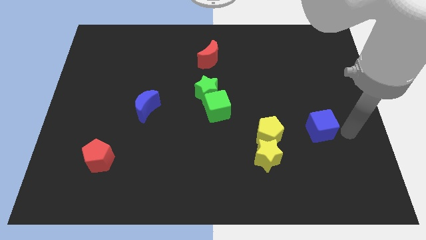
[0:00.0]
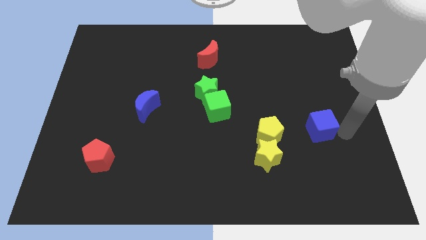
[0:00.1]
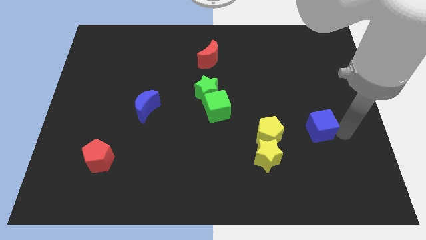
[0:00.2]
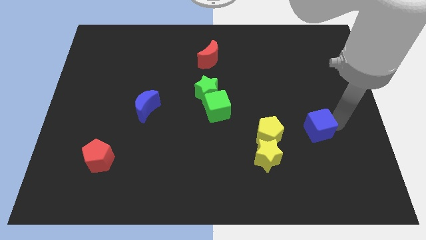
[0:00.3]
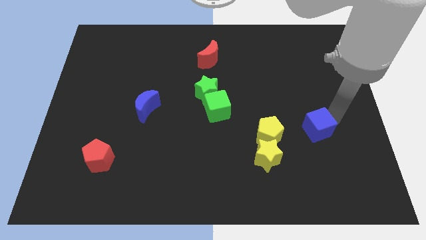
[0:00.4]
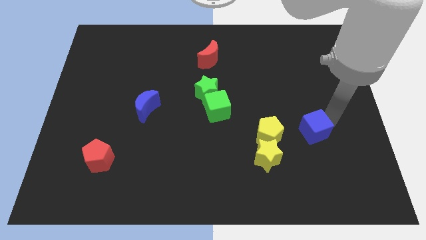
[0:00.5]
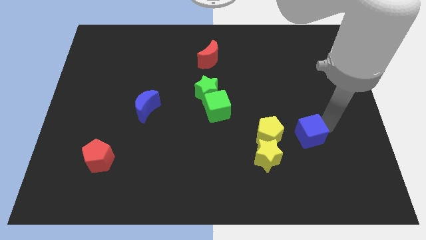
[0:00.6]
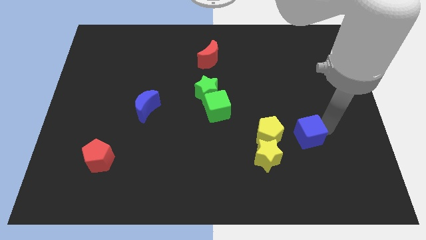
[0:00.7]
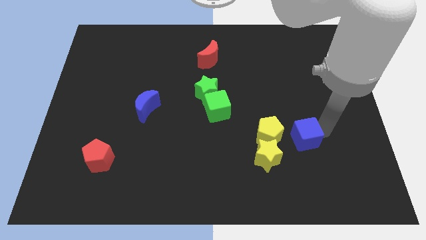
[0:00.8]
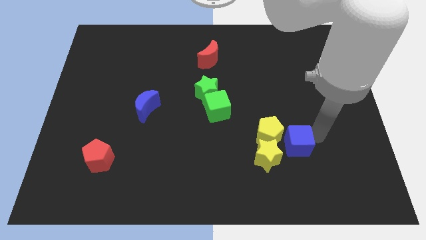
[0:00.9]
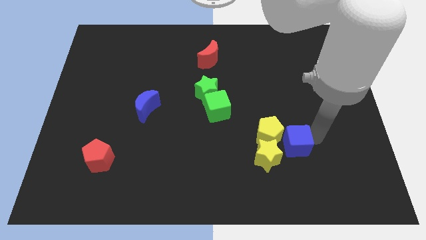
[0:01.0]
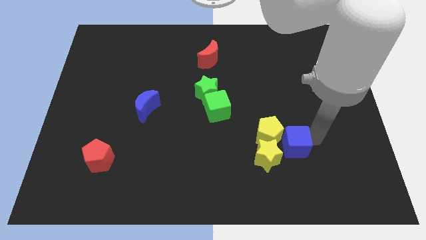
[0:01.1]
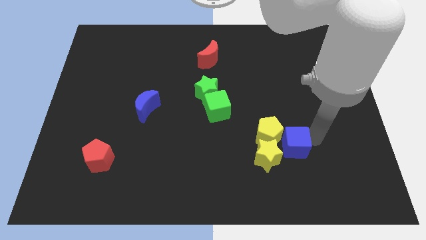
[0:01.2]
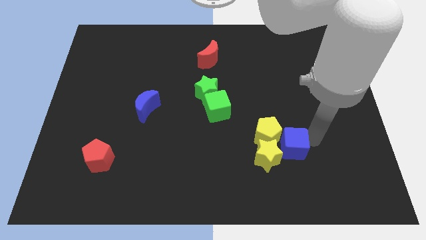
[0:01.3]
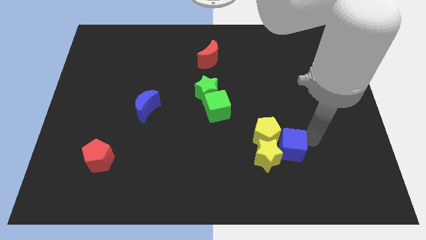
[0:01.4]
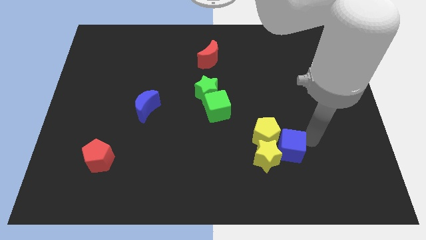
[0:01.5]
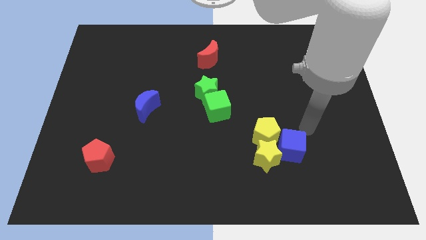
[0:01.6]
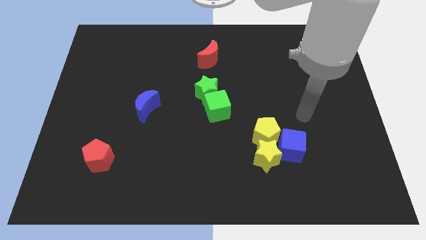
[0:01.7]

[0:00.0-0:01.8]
push the blue cube into yellow pentagon

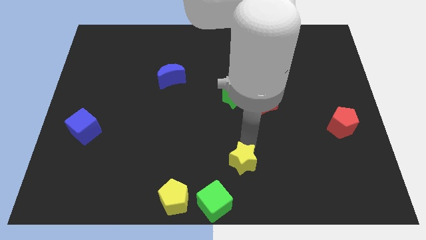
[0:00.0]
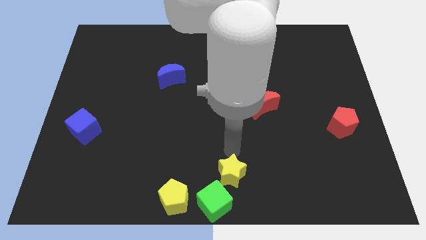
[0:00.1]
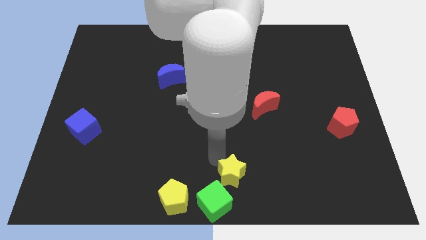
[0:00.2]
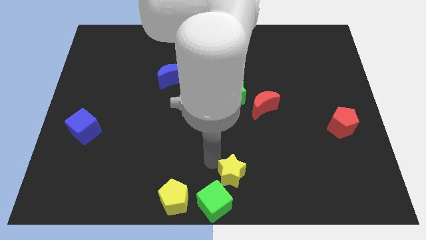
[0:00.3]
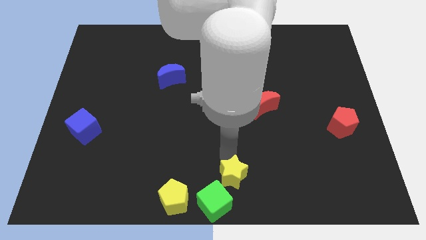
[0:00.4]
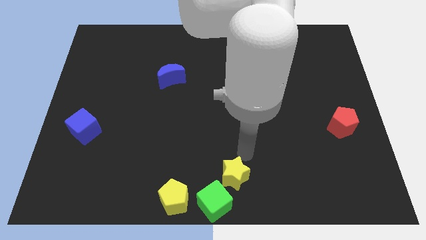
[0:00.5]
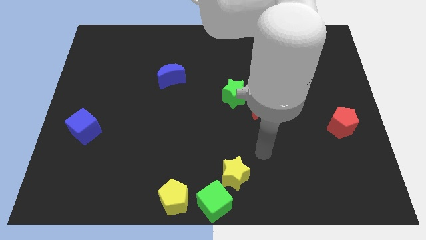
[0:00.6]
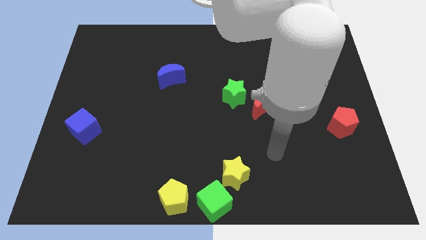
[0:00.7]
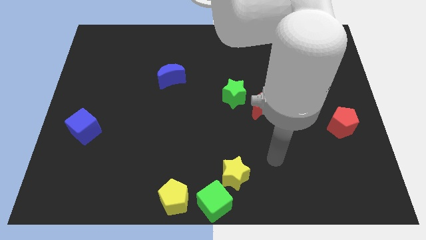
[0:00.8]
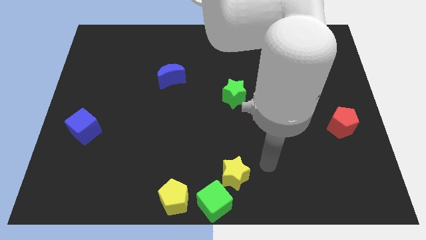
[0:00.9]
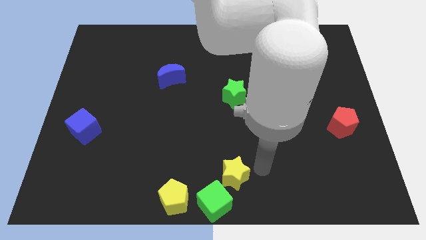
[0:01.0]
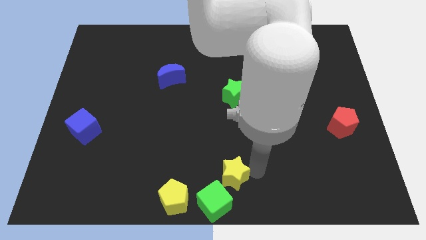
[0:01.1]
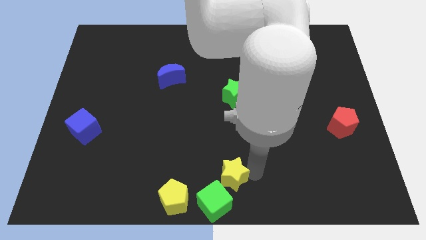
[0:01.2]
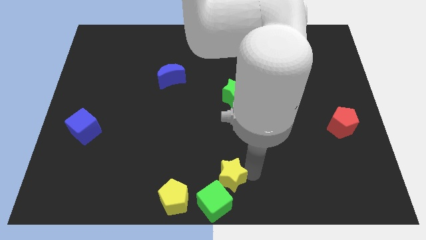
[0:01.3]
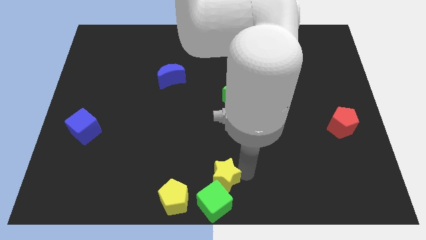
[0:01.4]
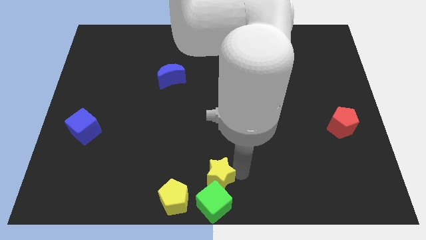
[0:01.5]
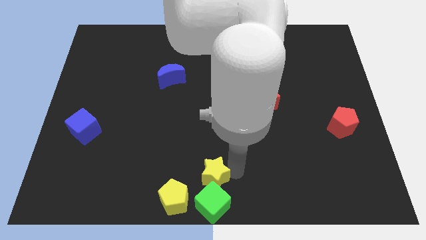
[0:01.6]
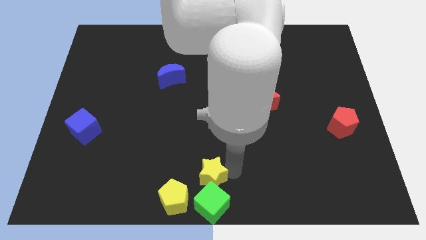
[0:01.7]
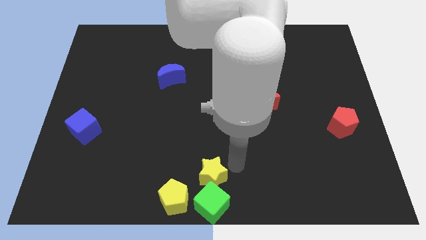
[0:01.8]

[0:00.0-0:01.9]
move the yellow star into the green cube

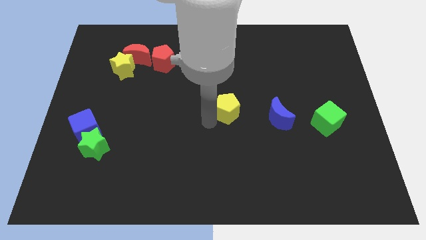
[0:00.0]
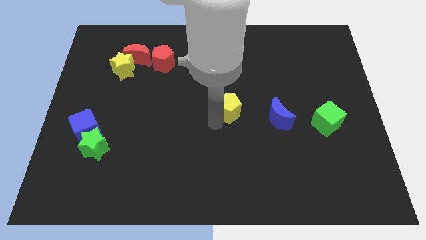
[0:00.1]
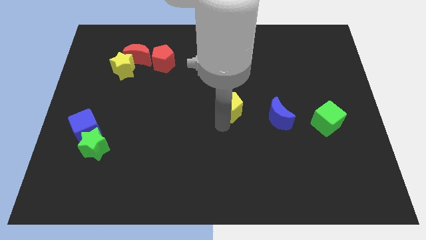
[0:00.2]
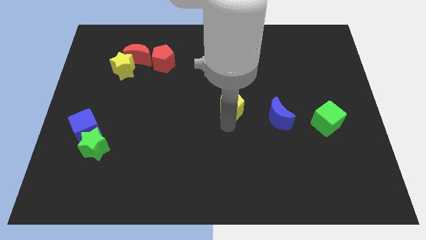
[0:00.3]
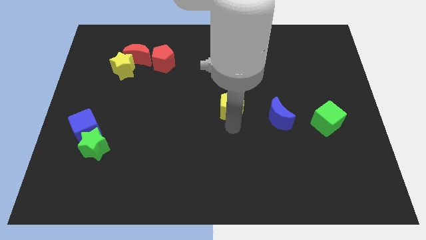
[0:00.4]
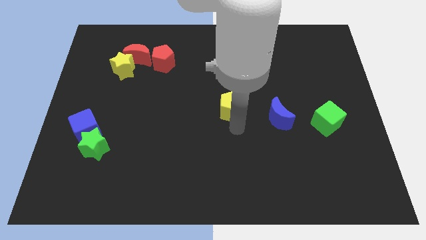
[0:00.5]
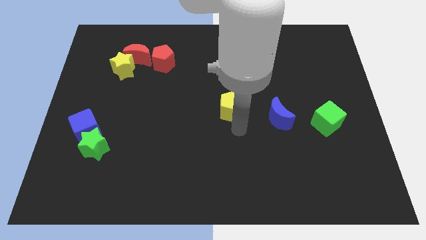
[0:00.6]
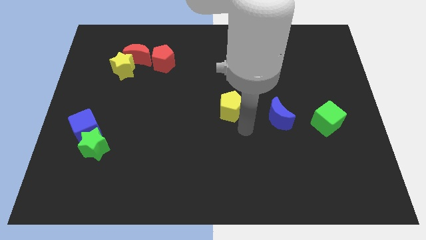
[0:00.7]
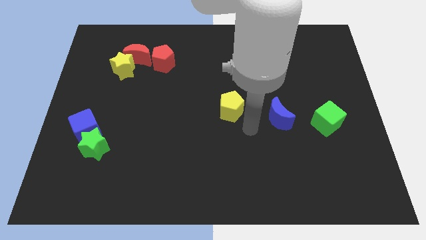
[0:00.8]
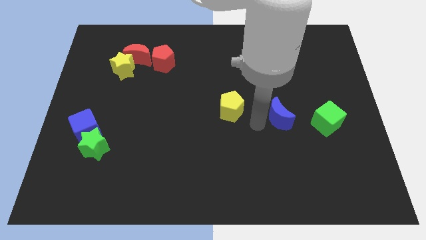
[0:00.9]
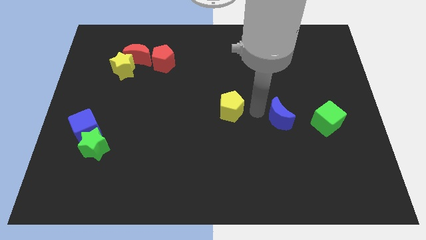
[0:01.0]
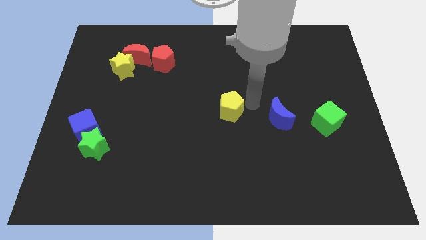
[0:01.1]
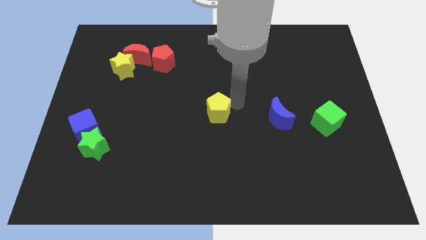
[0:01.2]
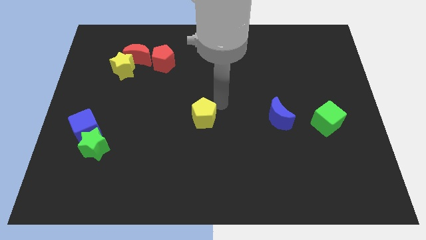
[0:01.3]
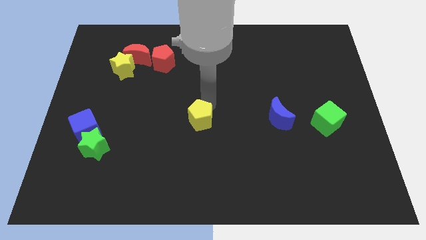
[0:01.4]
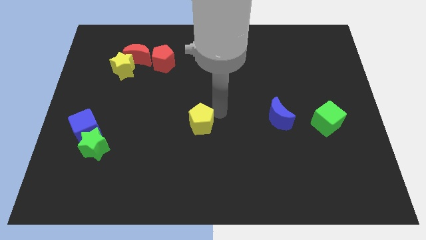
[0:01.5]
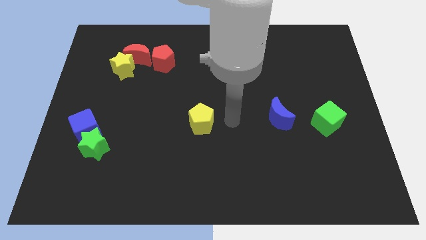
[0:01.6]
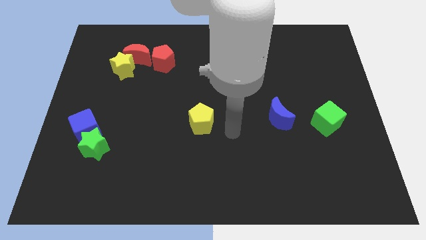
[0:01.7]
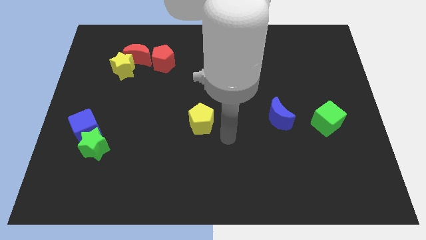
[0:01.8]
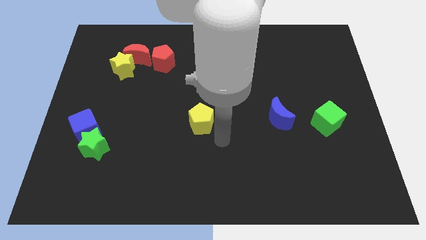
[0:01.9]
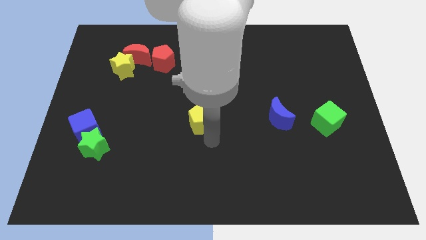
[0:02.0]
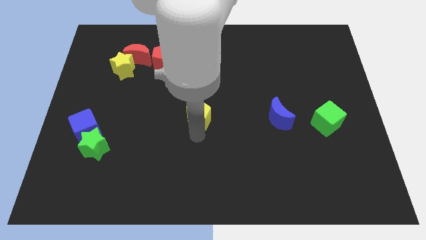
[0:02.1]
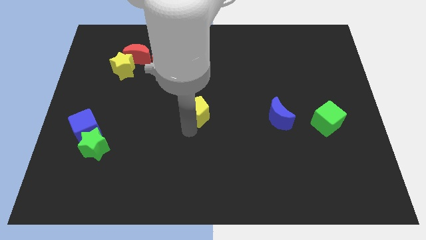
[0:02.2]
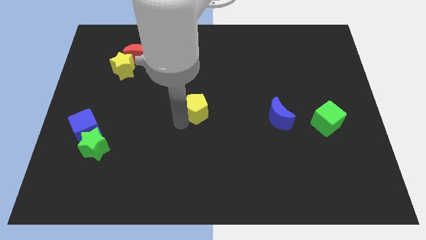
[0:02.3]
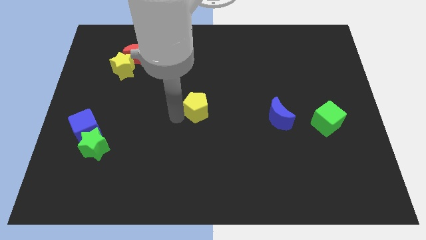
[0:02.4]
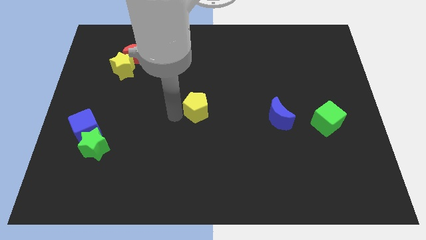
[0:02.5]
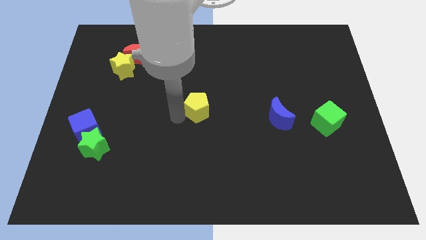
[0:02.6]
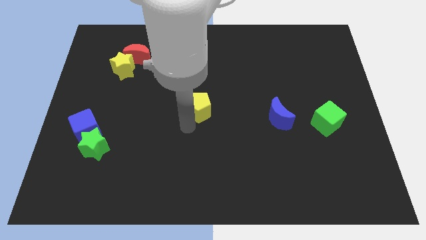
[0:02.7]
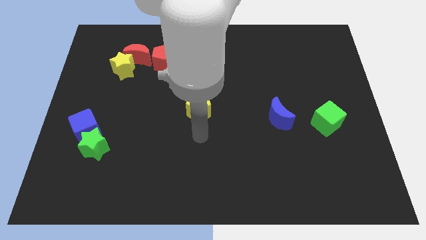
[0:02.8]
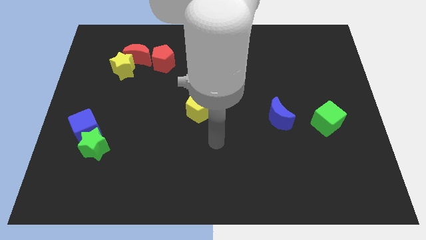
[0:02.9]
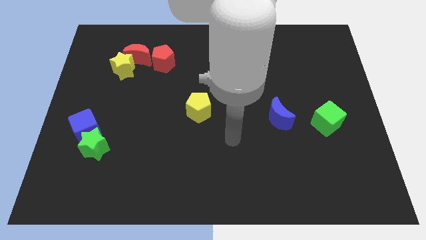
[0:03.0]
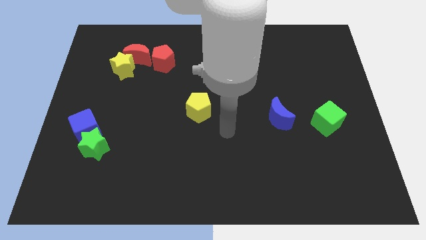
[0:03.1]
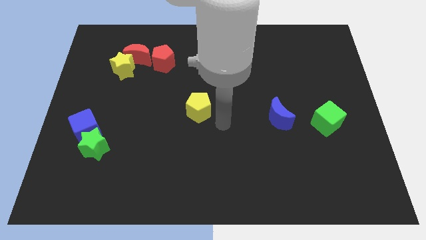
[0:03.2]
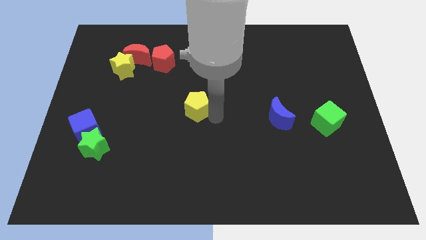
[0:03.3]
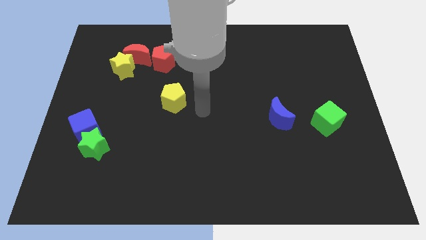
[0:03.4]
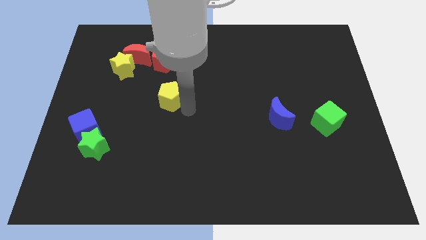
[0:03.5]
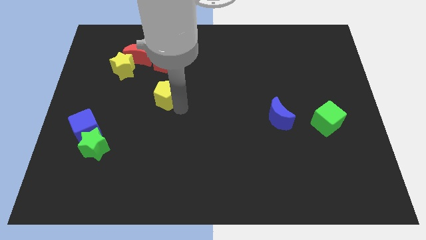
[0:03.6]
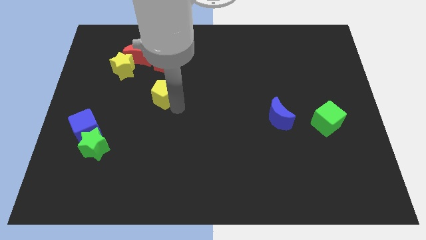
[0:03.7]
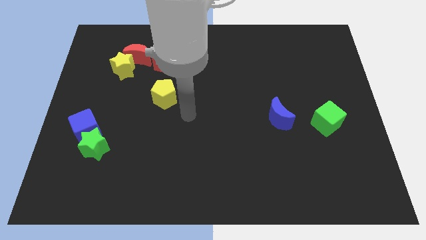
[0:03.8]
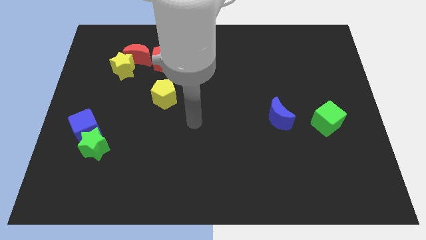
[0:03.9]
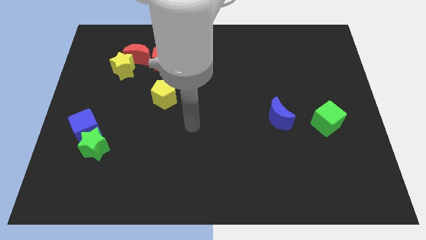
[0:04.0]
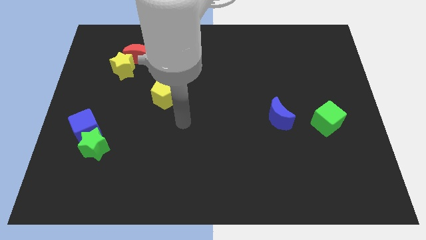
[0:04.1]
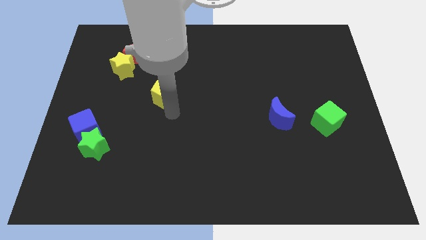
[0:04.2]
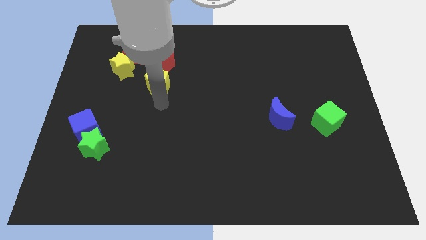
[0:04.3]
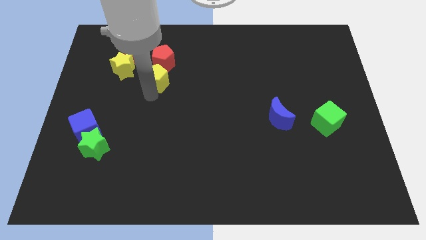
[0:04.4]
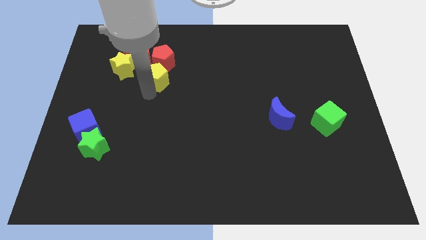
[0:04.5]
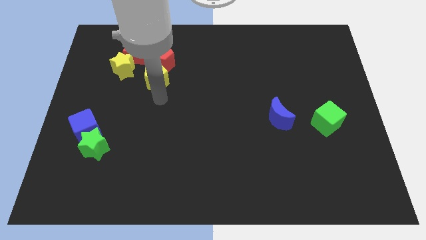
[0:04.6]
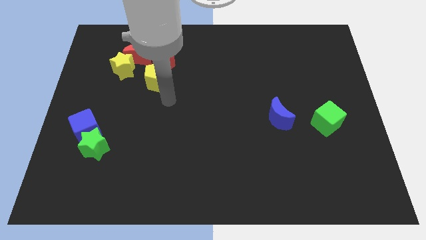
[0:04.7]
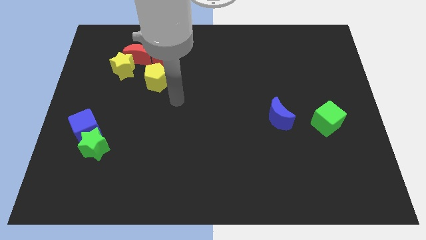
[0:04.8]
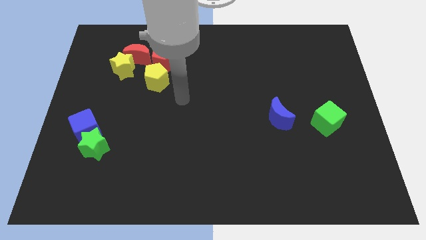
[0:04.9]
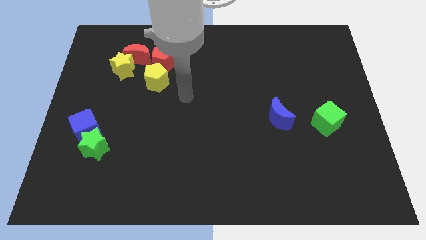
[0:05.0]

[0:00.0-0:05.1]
push yellow pentagon towards red pentagon
